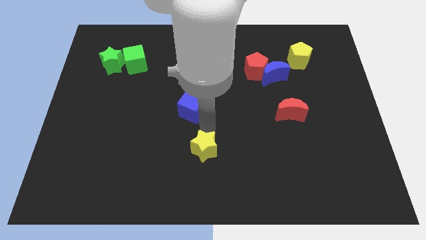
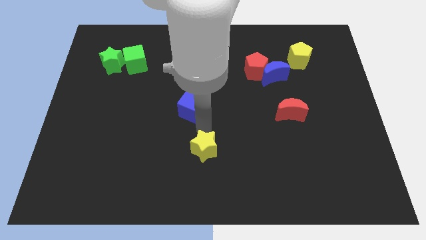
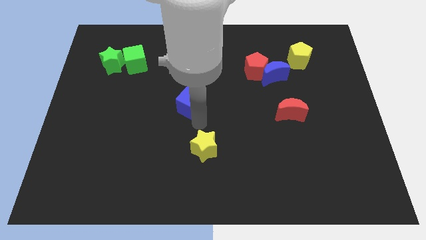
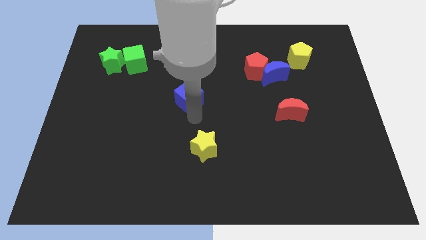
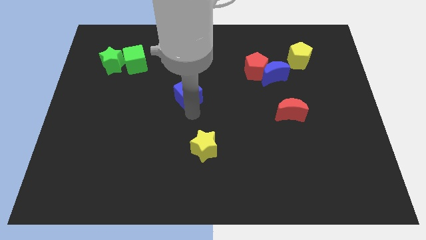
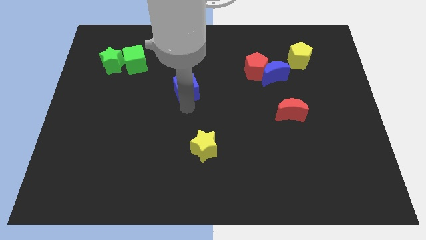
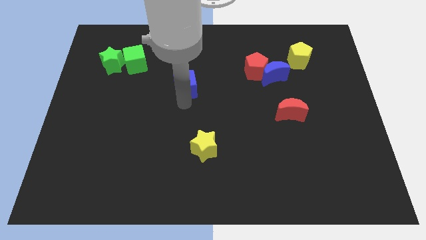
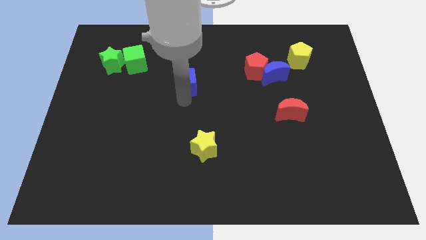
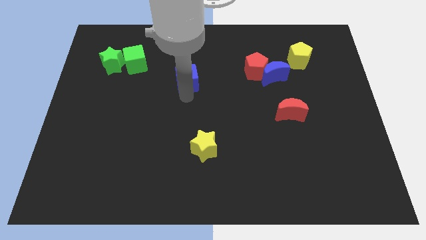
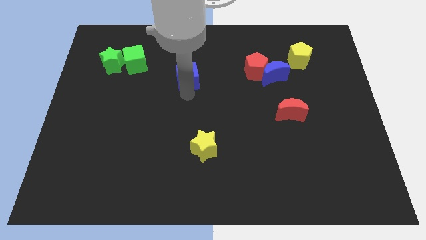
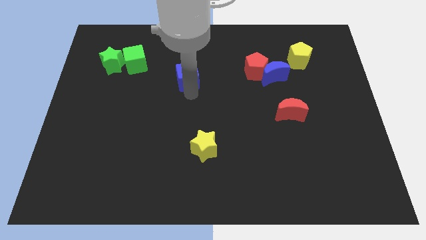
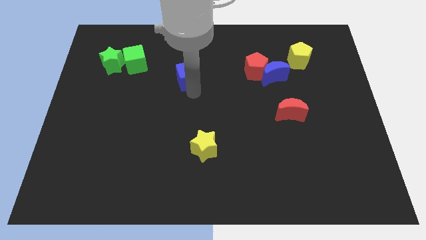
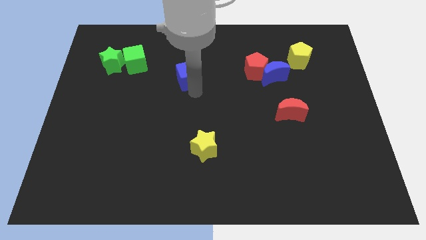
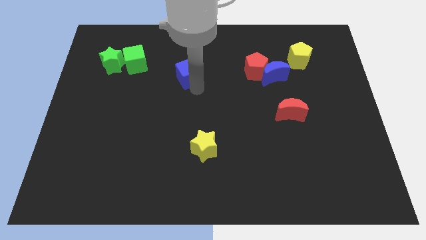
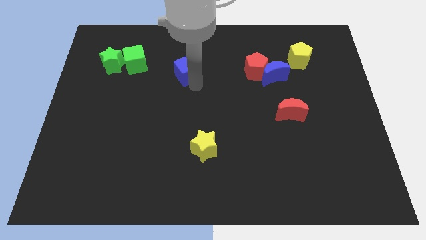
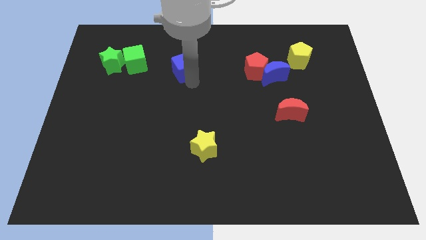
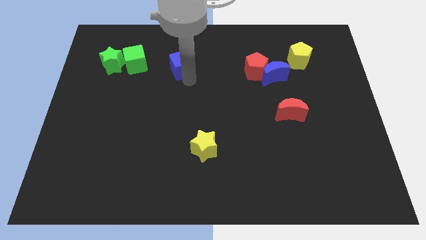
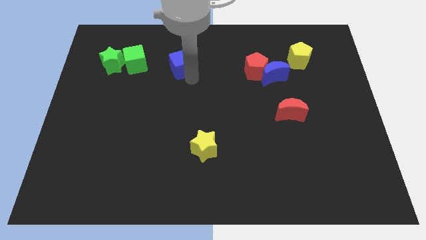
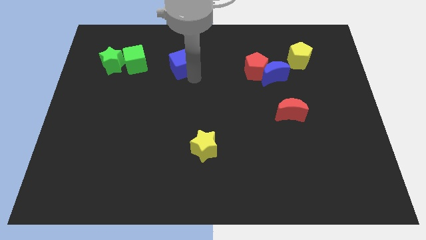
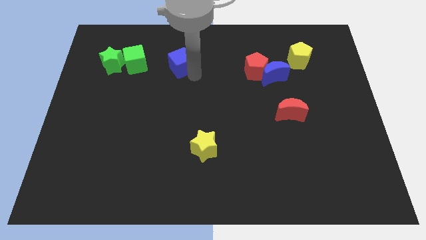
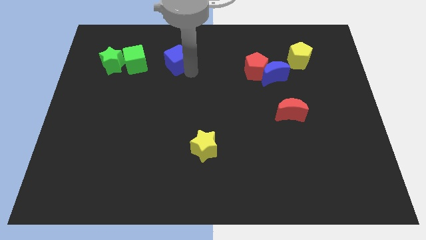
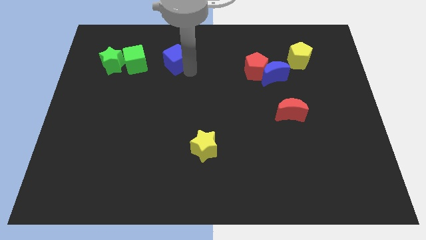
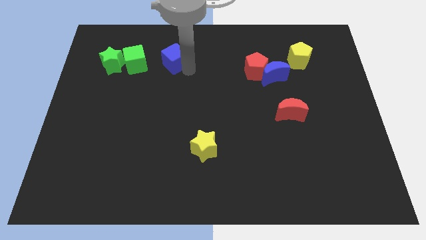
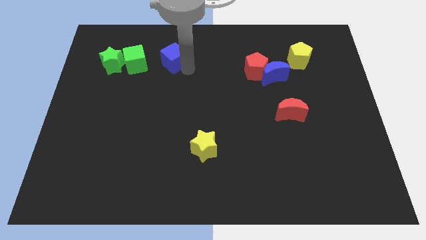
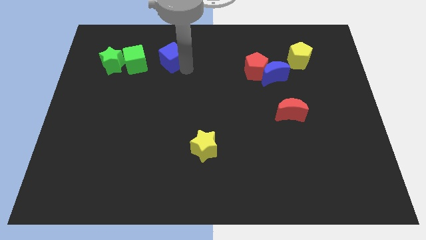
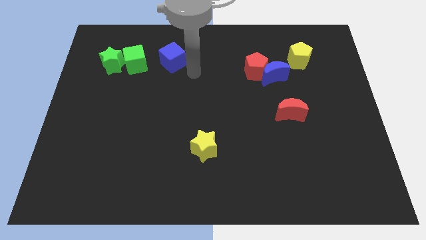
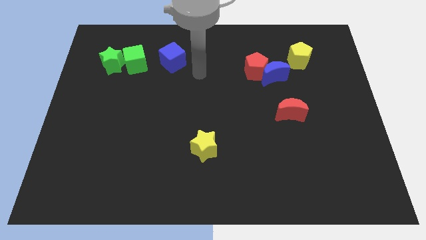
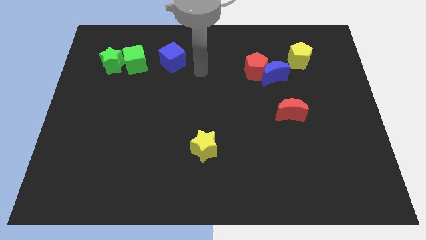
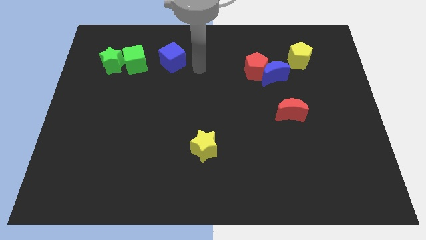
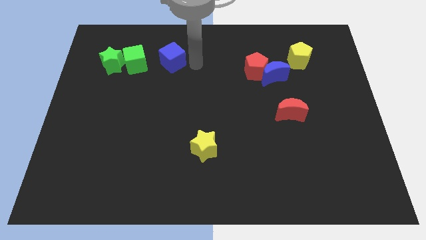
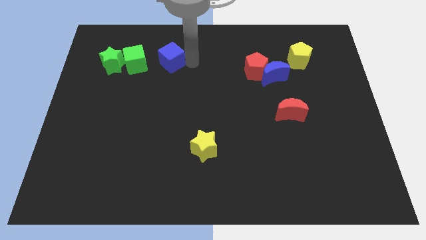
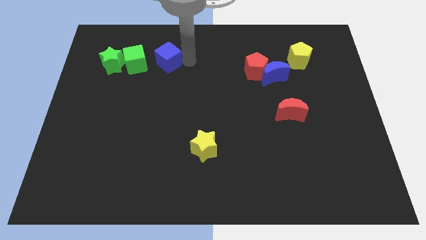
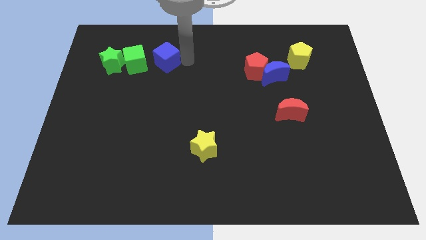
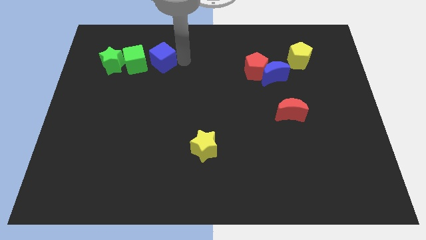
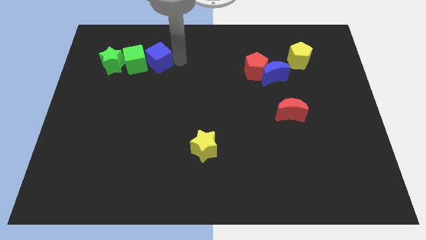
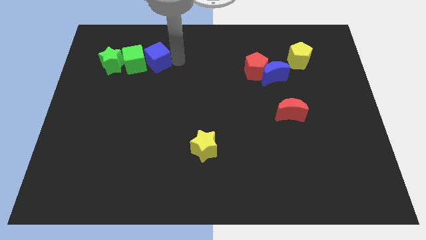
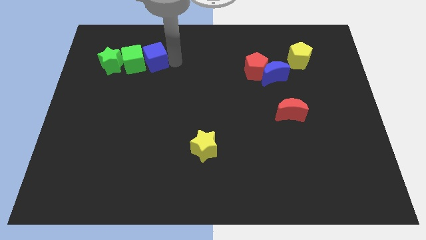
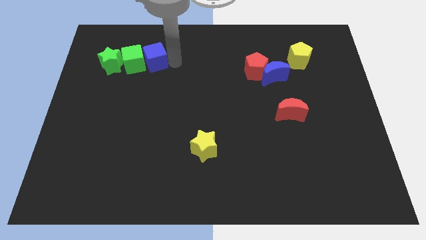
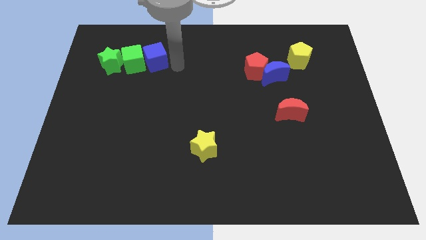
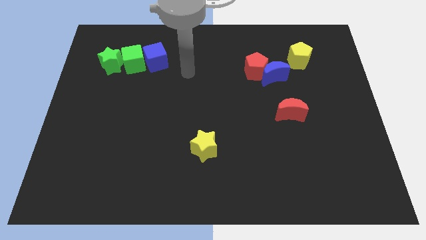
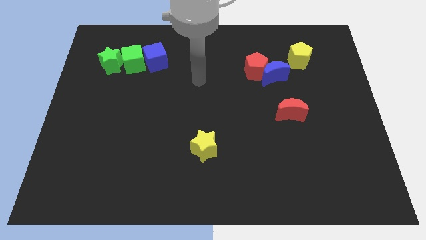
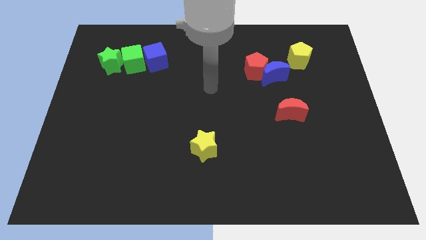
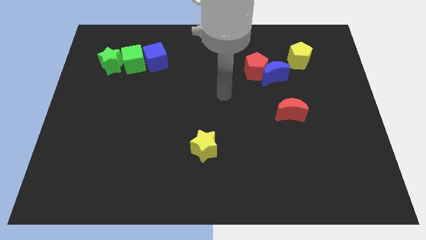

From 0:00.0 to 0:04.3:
move the blue cube into green cube to the right

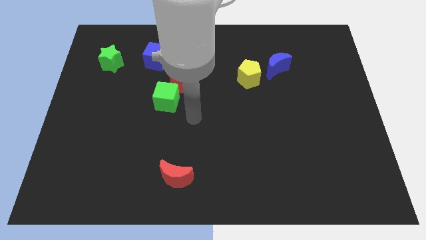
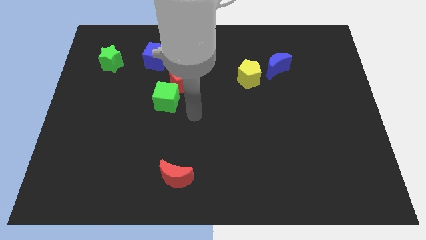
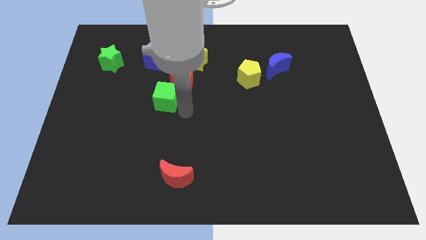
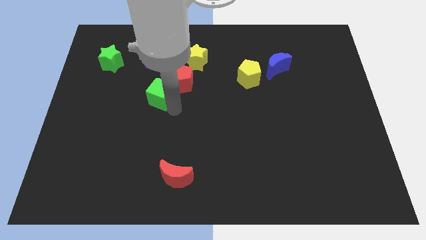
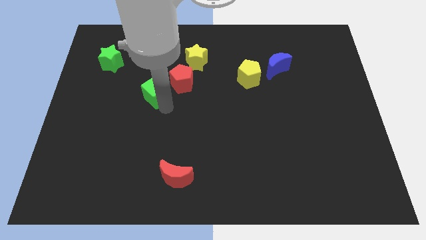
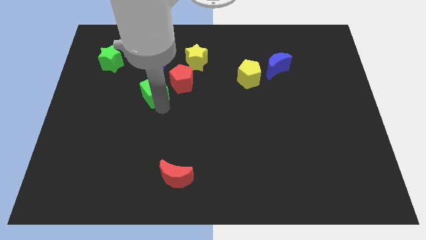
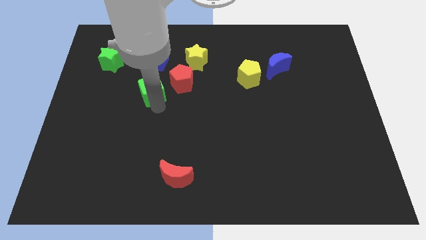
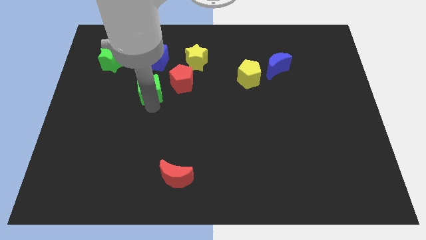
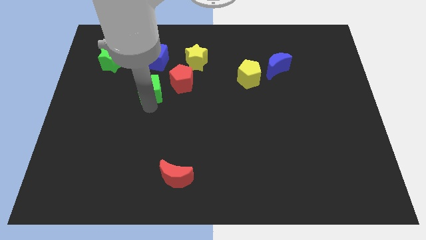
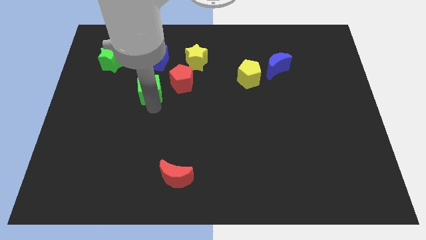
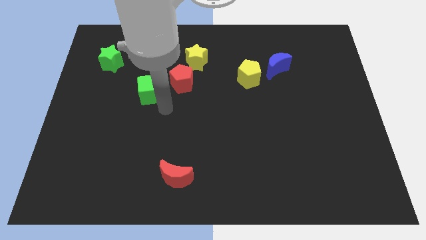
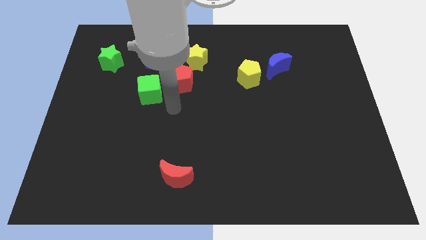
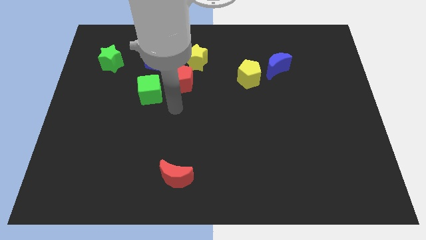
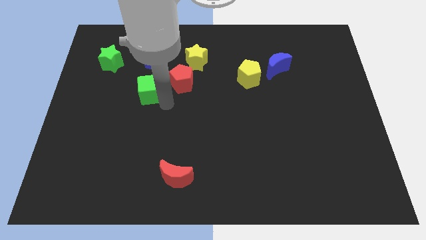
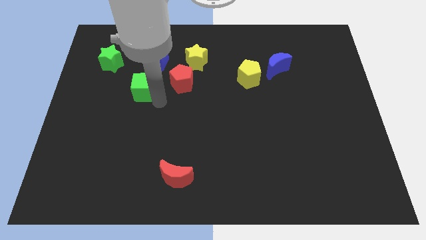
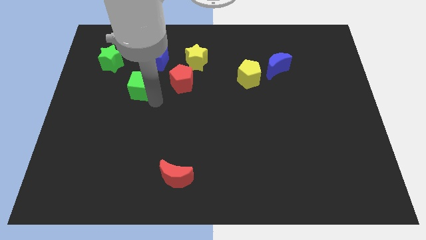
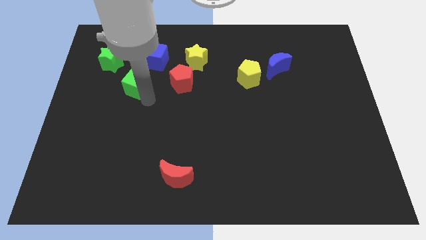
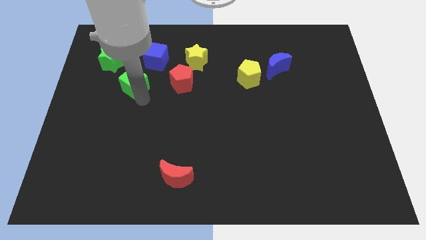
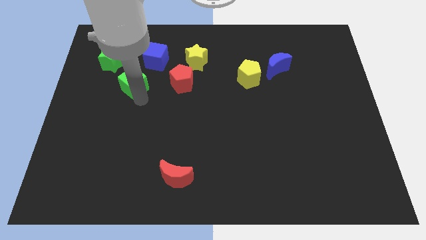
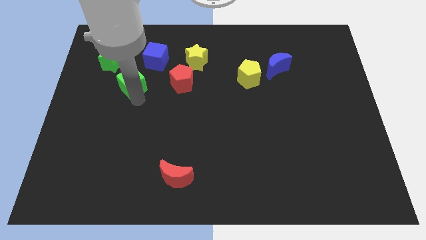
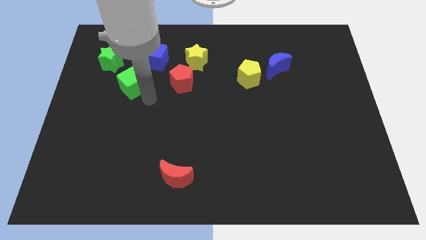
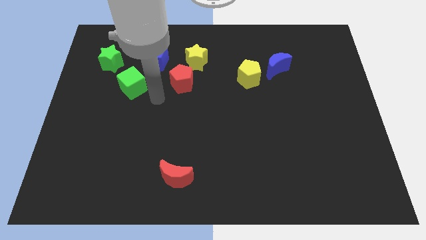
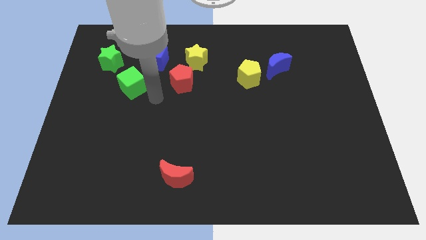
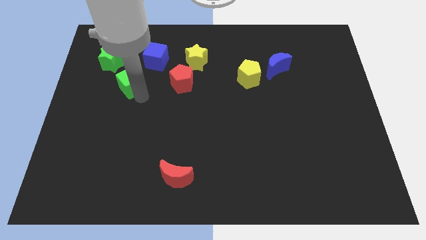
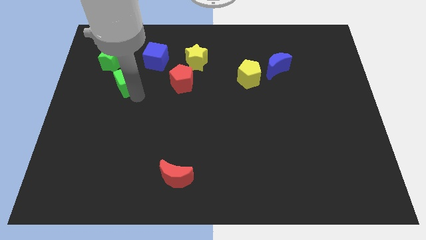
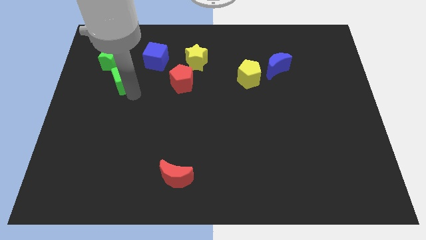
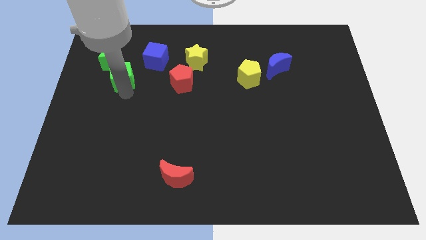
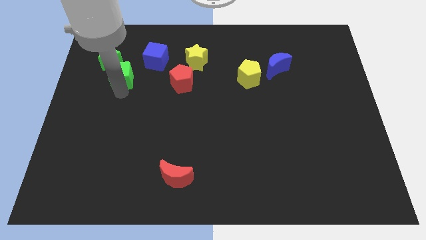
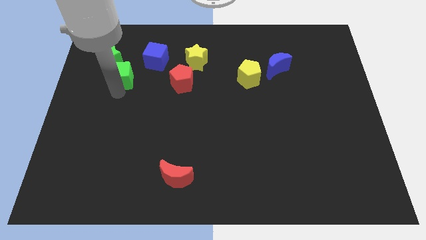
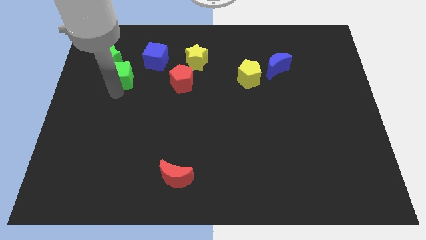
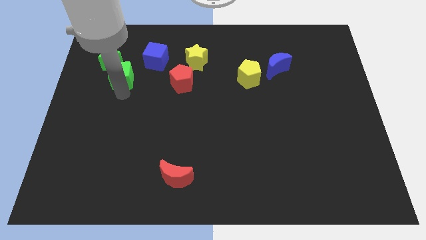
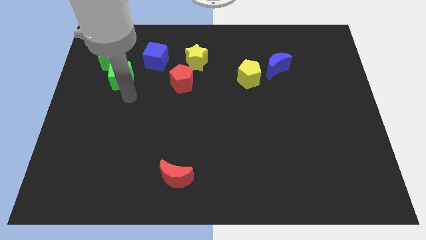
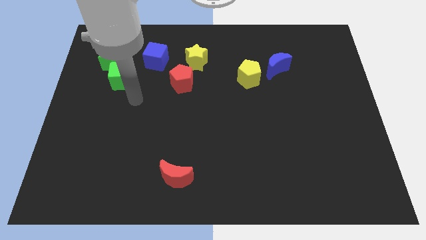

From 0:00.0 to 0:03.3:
push green square diagonal bottom right of green star

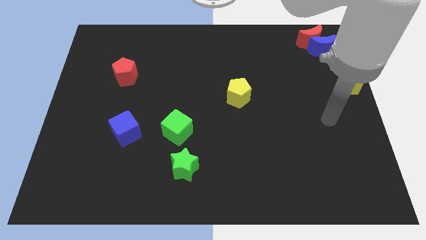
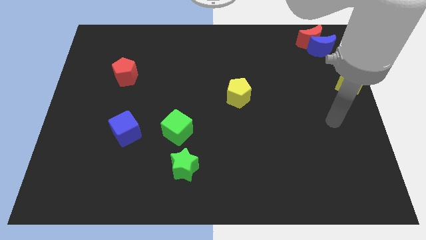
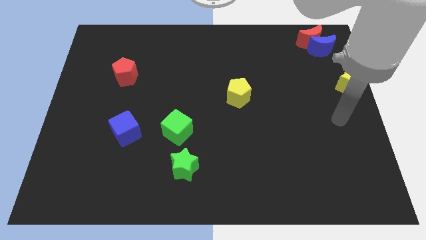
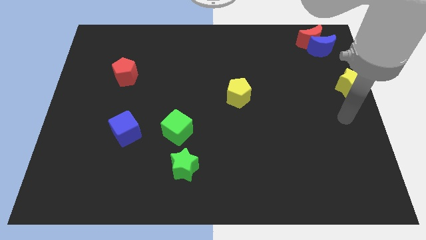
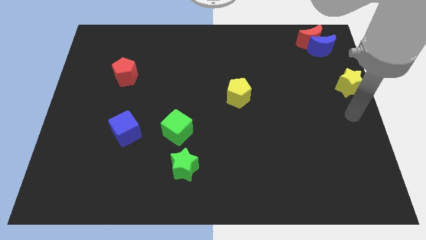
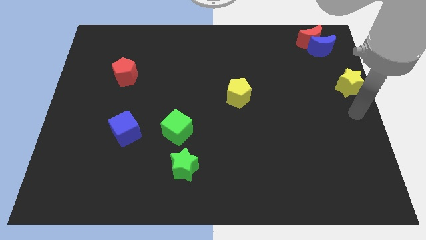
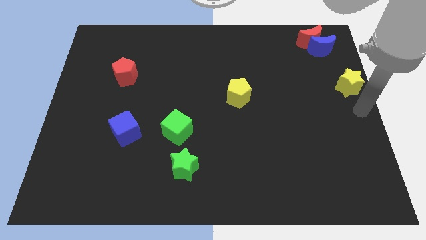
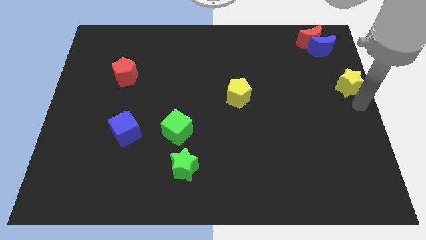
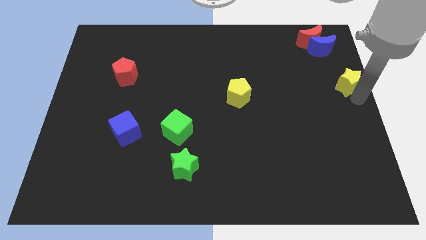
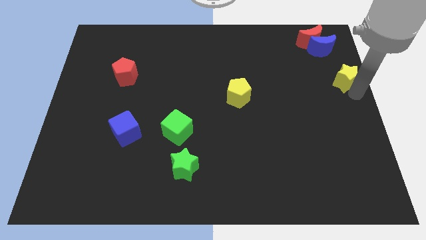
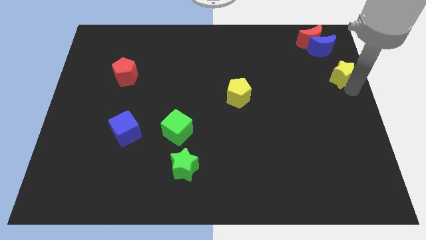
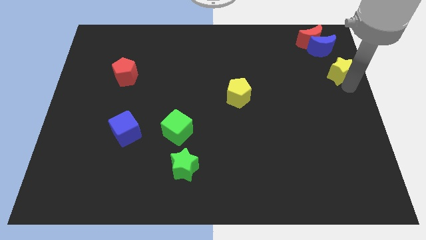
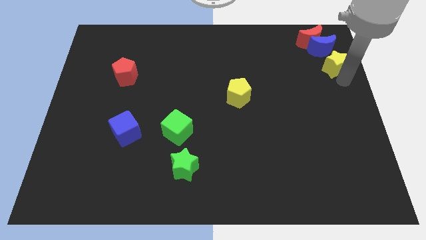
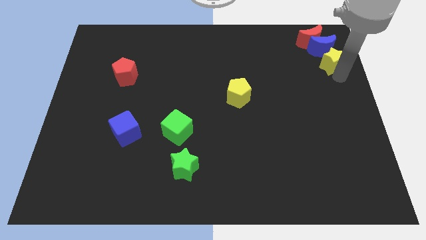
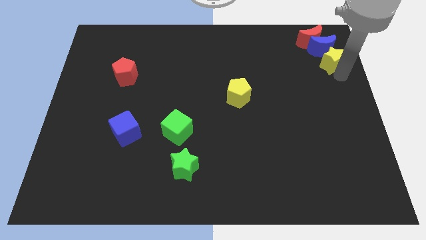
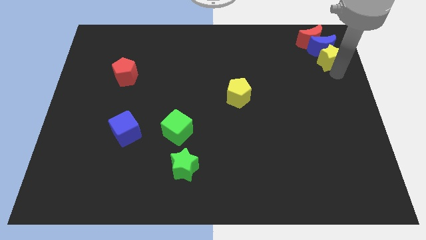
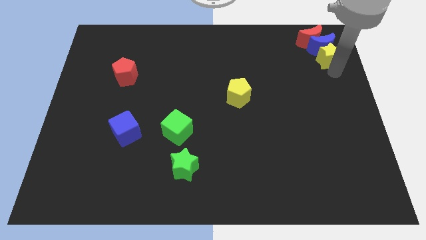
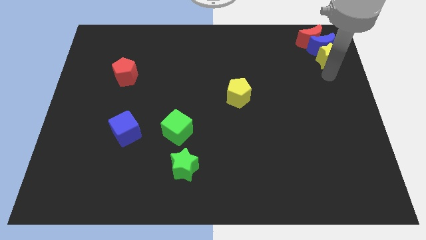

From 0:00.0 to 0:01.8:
push the yellow star into the blue crescent
